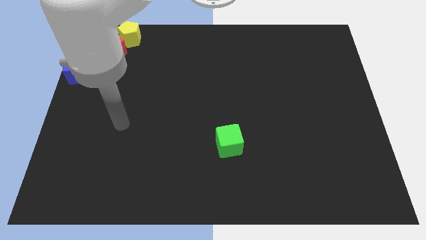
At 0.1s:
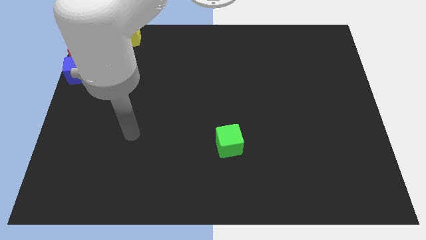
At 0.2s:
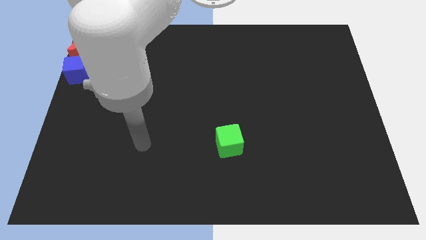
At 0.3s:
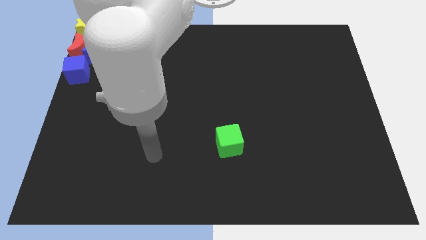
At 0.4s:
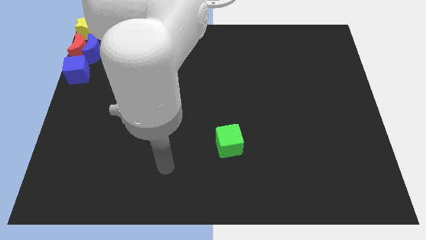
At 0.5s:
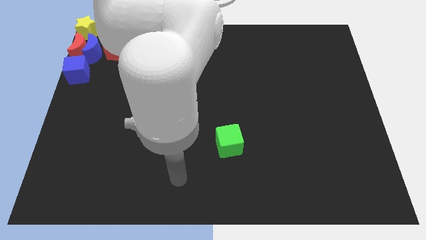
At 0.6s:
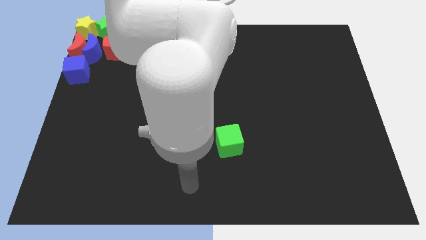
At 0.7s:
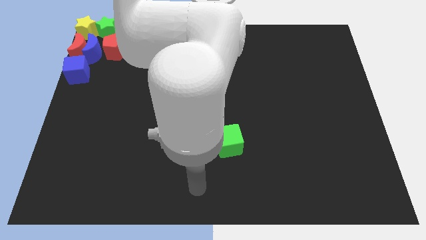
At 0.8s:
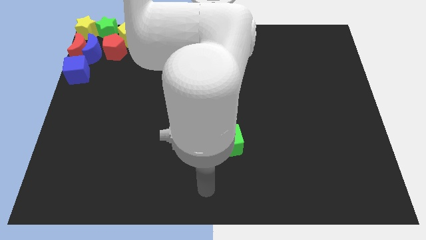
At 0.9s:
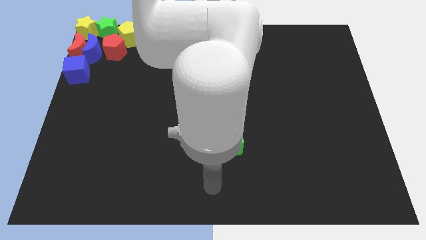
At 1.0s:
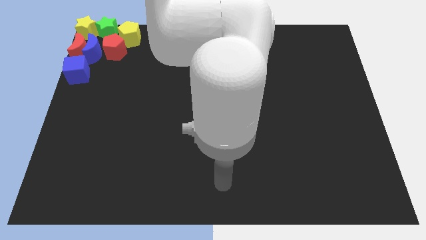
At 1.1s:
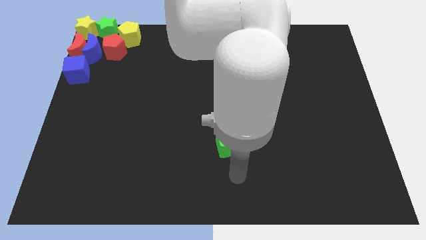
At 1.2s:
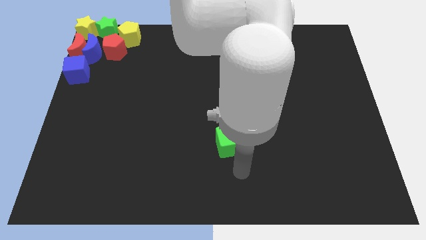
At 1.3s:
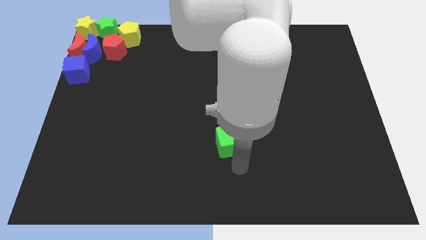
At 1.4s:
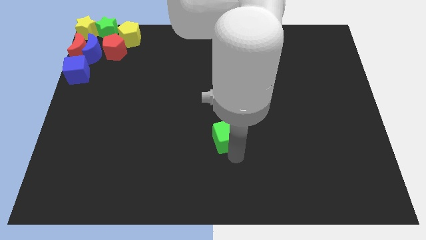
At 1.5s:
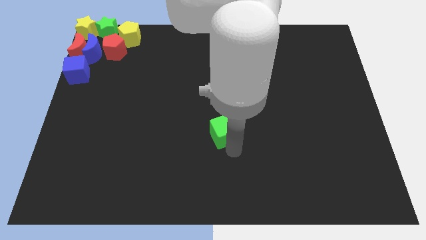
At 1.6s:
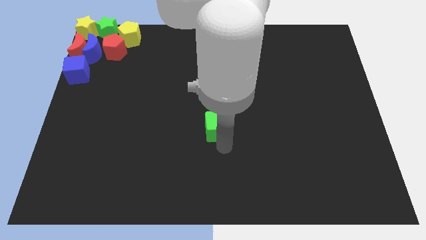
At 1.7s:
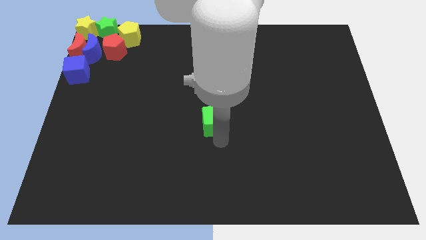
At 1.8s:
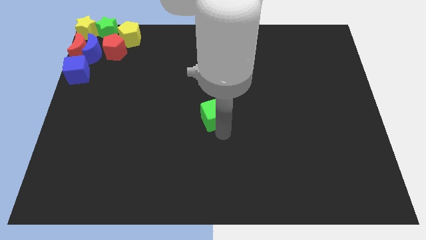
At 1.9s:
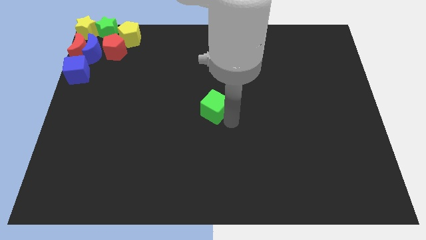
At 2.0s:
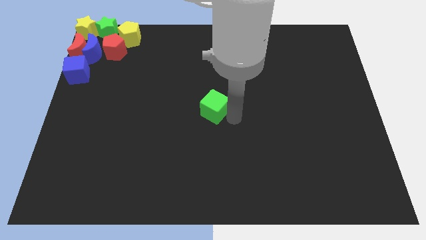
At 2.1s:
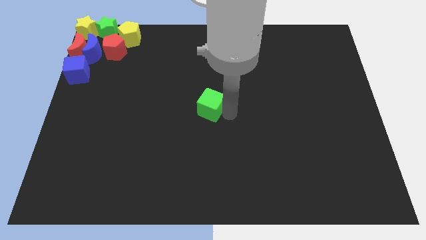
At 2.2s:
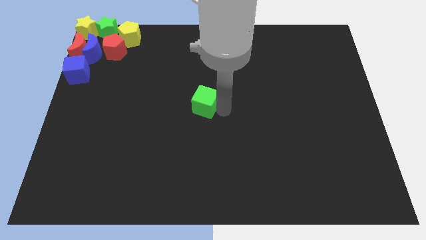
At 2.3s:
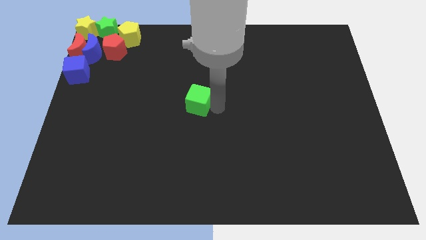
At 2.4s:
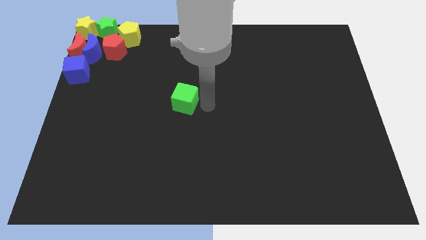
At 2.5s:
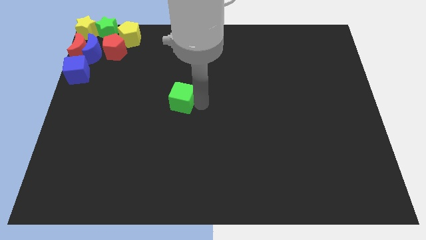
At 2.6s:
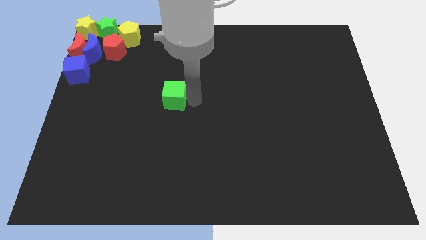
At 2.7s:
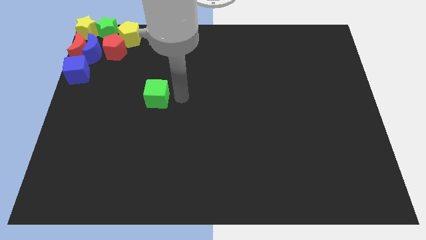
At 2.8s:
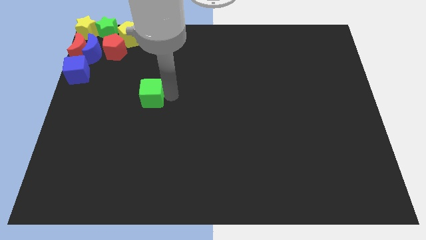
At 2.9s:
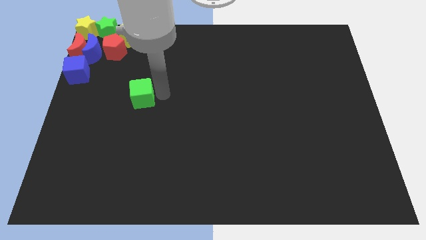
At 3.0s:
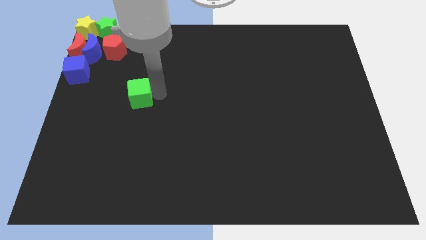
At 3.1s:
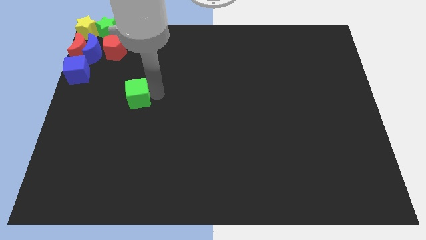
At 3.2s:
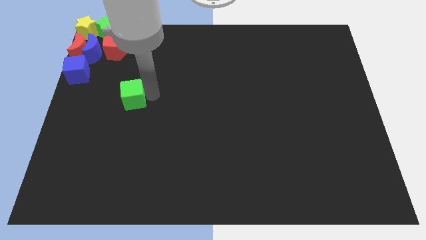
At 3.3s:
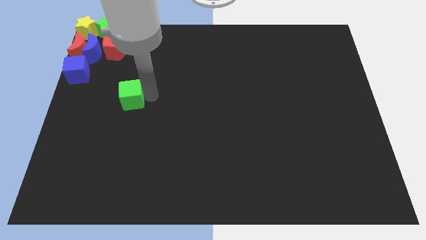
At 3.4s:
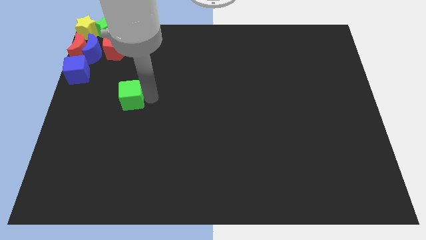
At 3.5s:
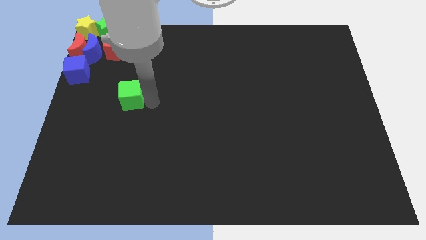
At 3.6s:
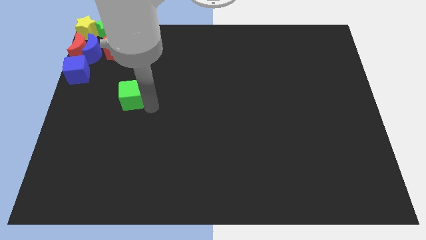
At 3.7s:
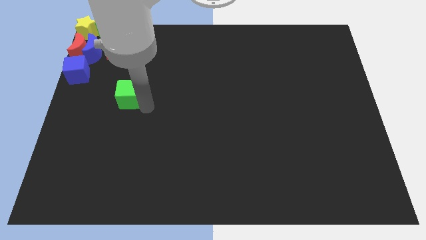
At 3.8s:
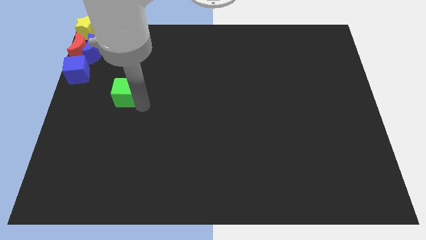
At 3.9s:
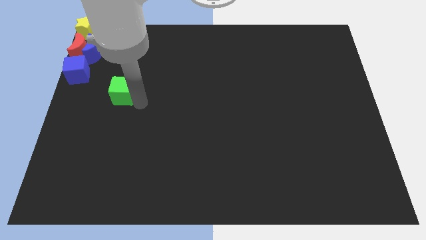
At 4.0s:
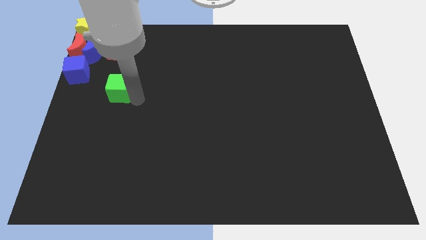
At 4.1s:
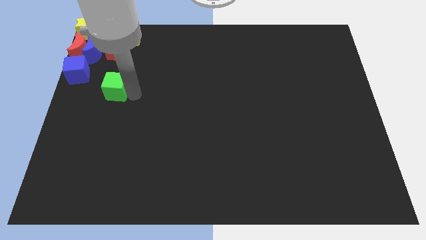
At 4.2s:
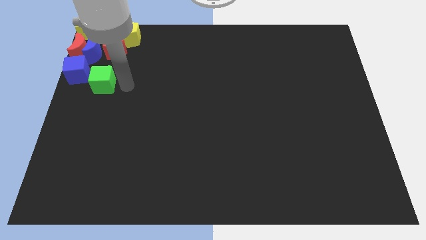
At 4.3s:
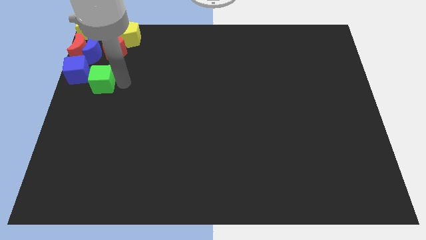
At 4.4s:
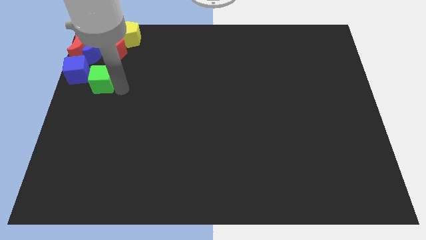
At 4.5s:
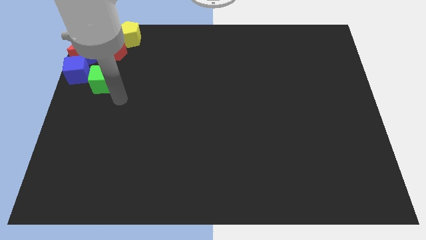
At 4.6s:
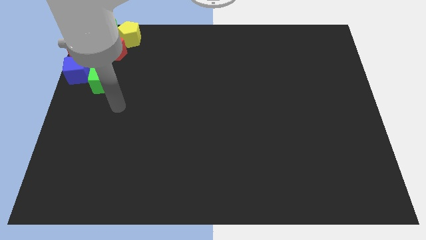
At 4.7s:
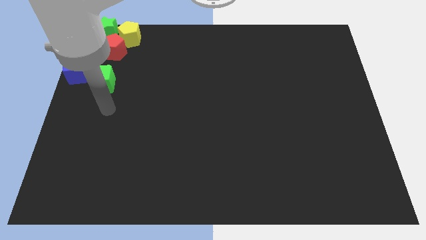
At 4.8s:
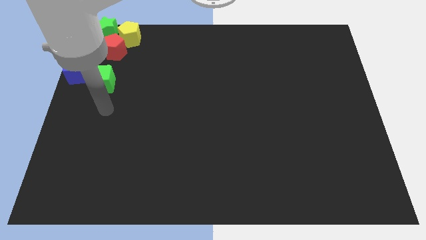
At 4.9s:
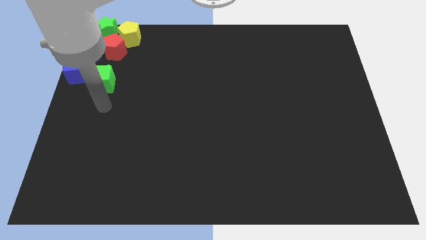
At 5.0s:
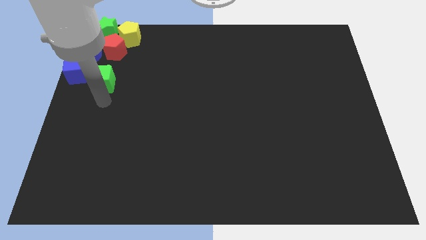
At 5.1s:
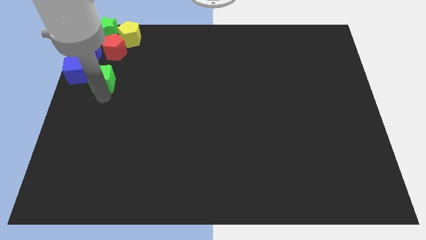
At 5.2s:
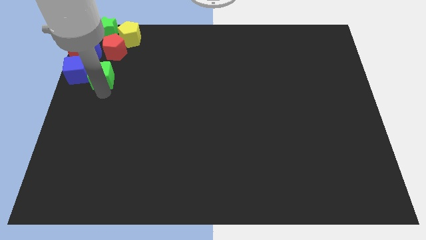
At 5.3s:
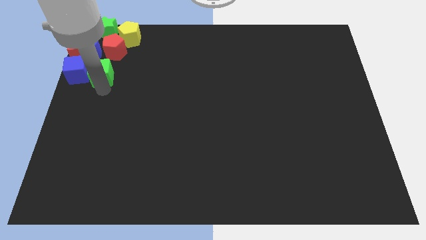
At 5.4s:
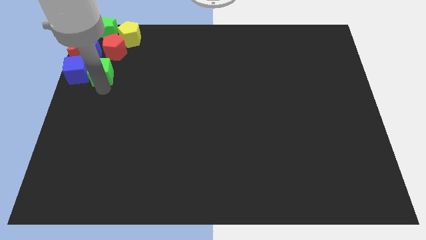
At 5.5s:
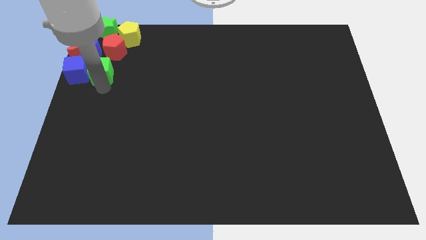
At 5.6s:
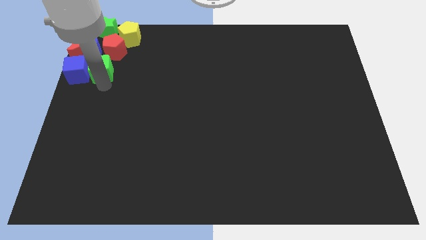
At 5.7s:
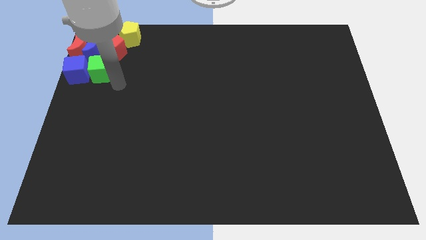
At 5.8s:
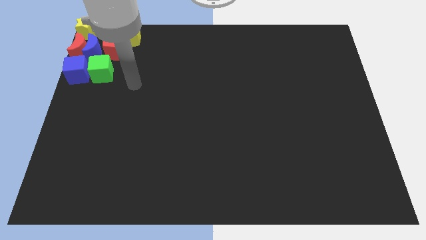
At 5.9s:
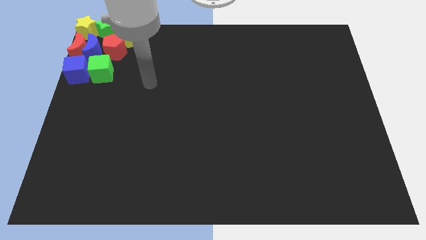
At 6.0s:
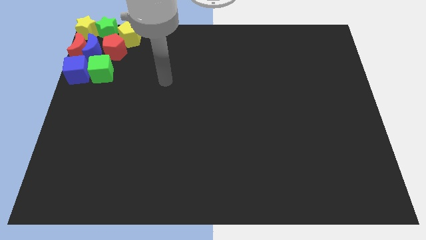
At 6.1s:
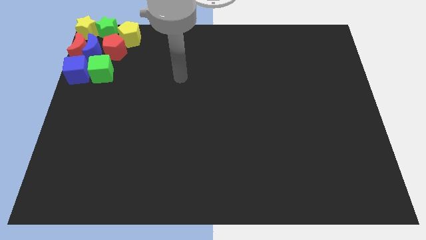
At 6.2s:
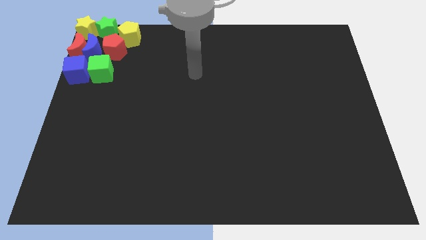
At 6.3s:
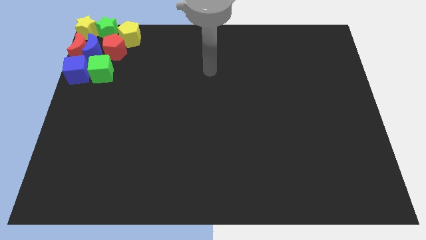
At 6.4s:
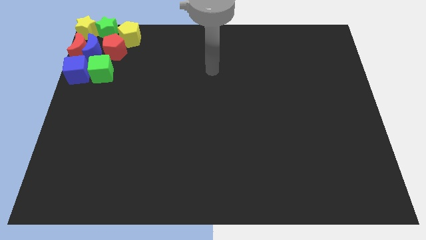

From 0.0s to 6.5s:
drag the green cube into eh right side of the blue cube

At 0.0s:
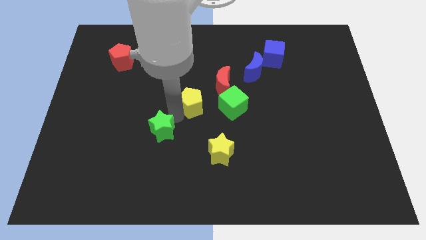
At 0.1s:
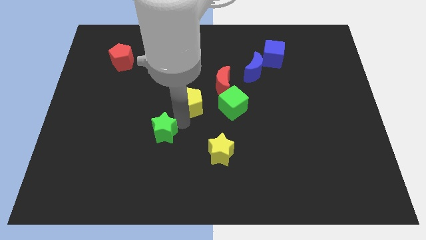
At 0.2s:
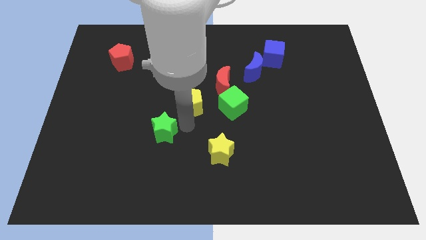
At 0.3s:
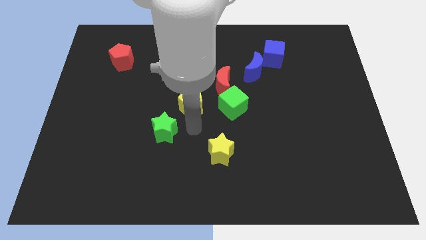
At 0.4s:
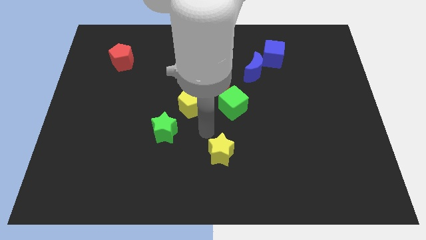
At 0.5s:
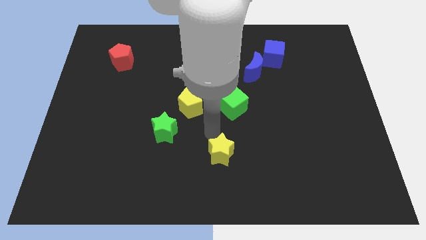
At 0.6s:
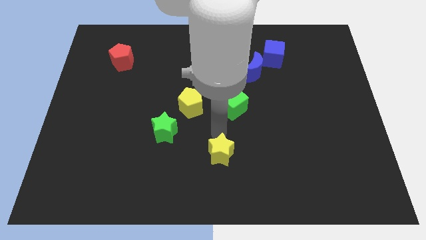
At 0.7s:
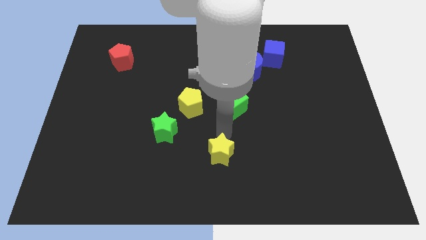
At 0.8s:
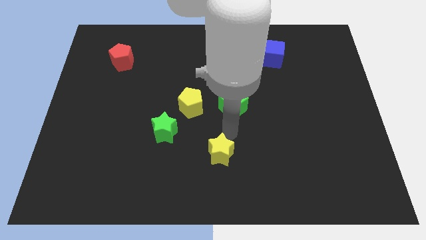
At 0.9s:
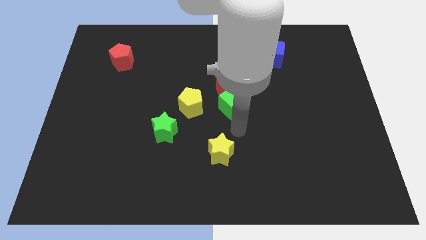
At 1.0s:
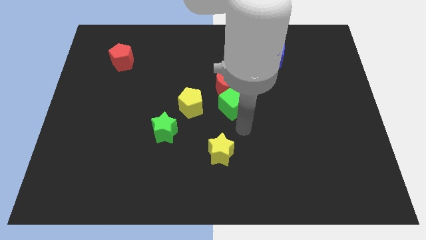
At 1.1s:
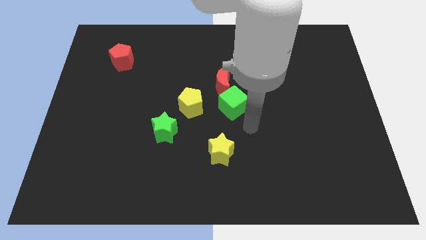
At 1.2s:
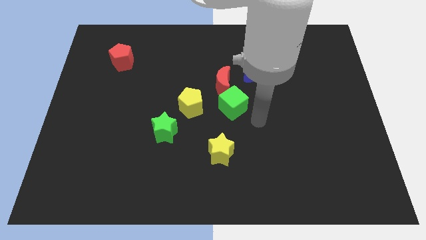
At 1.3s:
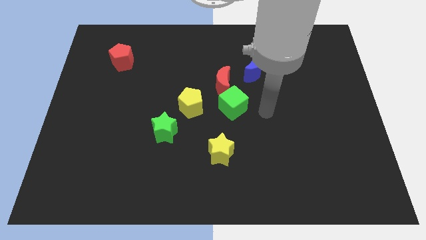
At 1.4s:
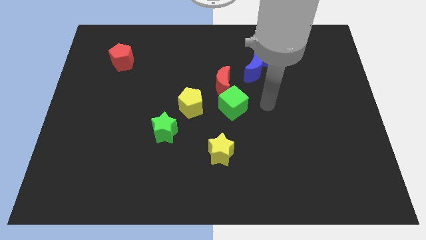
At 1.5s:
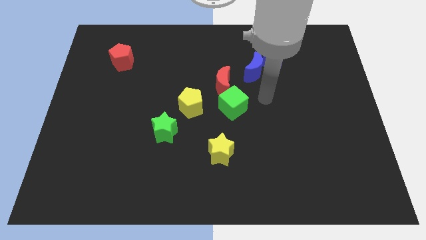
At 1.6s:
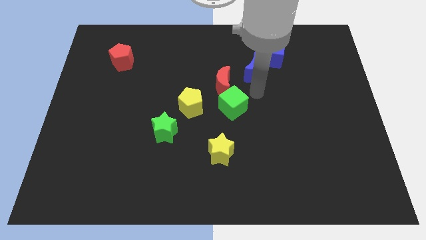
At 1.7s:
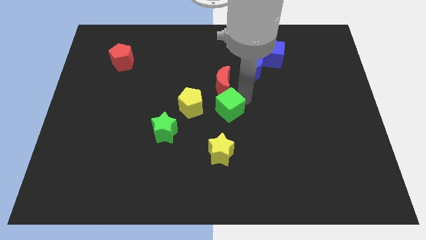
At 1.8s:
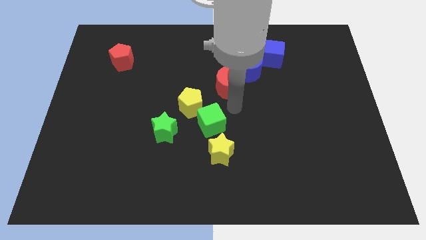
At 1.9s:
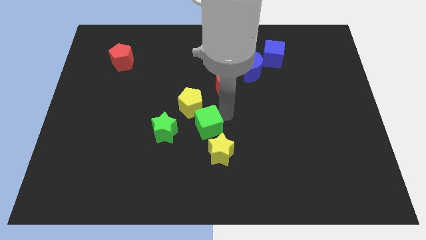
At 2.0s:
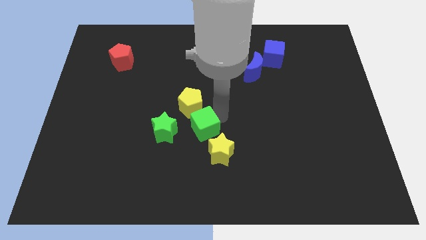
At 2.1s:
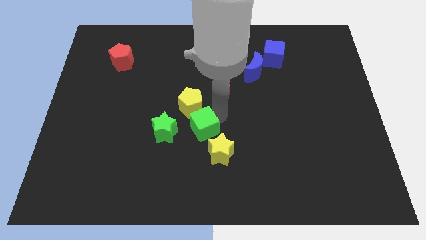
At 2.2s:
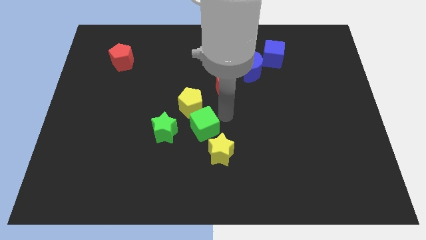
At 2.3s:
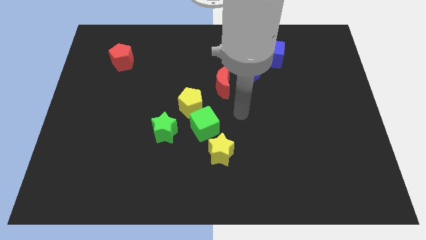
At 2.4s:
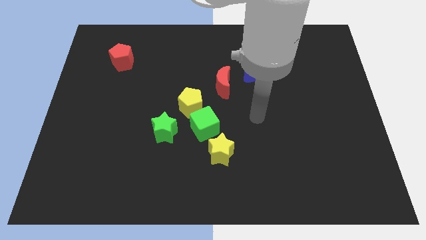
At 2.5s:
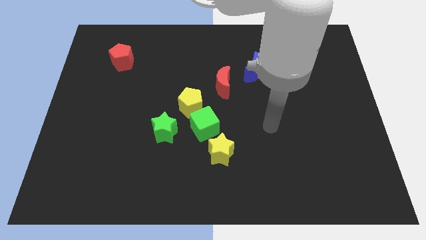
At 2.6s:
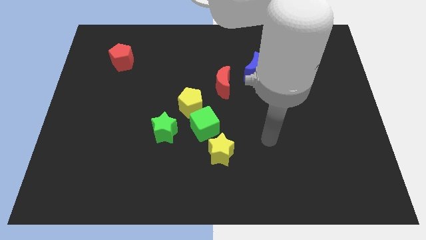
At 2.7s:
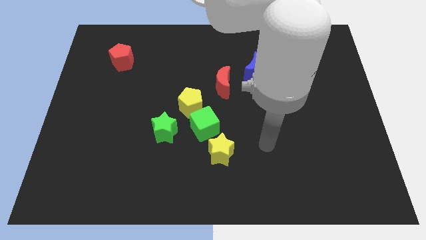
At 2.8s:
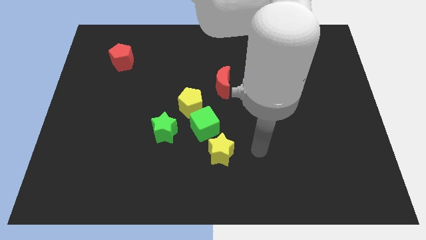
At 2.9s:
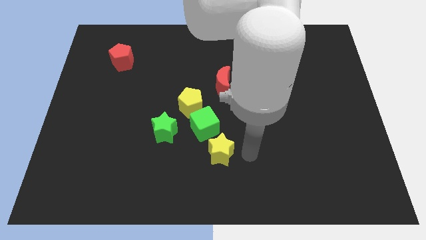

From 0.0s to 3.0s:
place green cube to the bottom right of yellow pentagon
